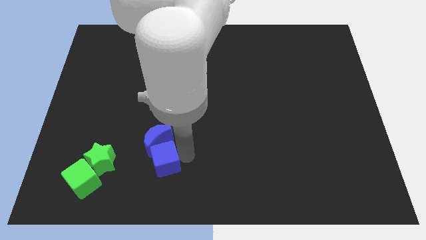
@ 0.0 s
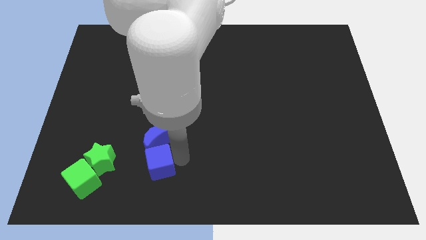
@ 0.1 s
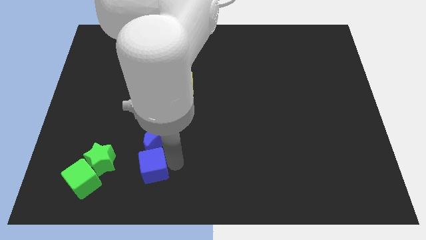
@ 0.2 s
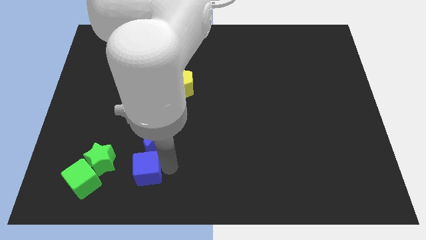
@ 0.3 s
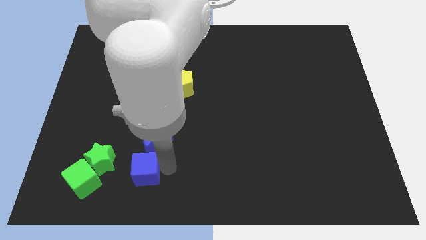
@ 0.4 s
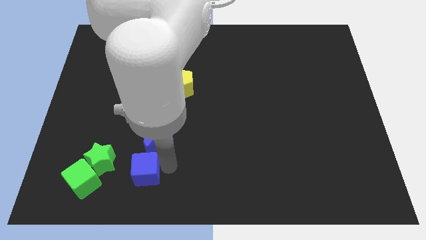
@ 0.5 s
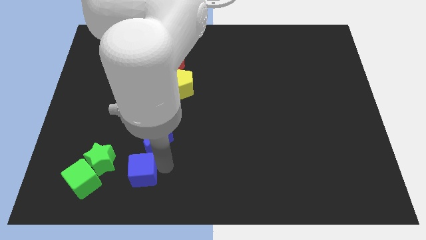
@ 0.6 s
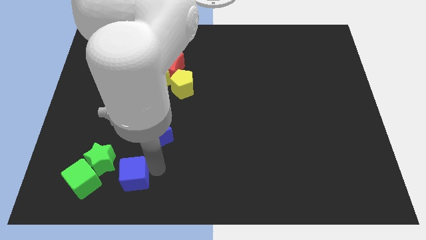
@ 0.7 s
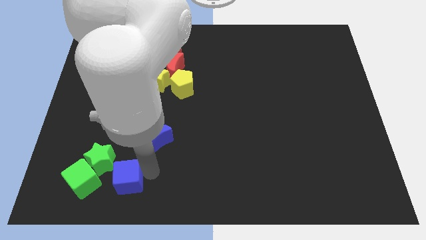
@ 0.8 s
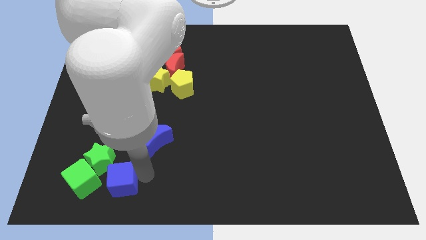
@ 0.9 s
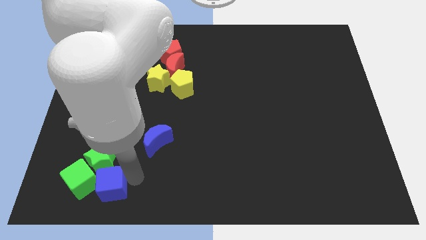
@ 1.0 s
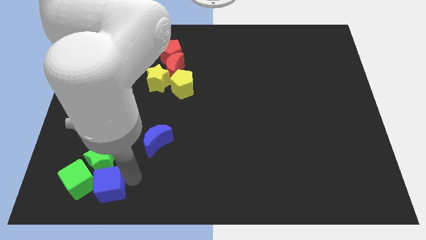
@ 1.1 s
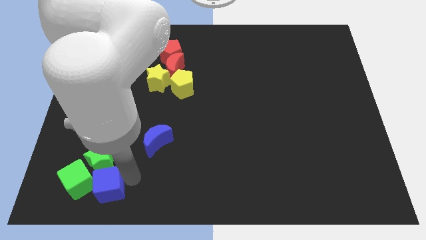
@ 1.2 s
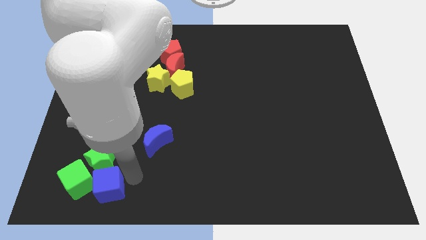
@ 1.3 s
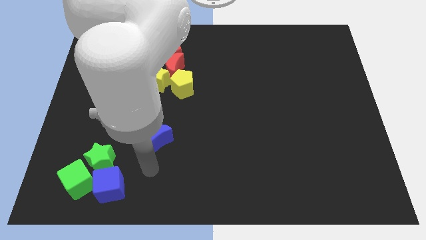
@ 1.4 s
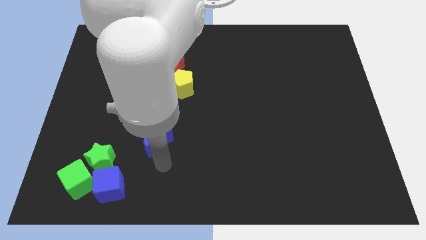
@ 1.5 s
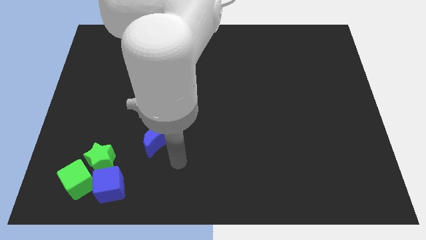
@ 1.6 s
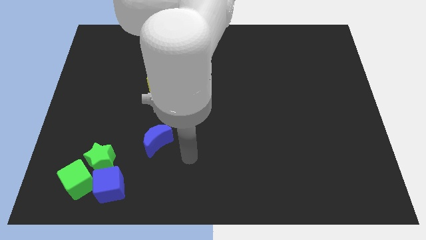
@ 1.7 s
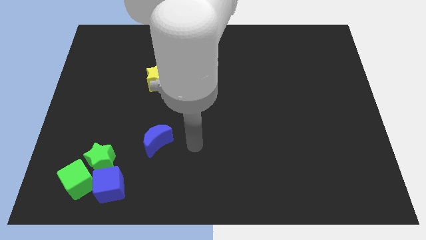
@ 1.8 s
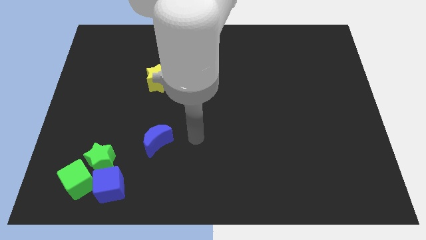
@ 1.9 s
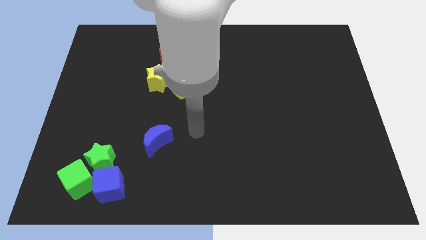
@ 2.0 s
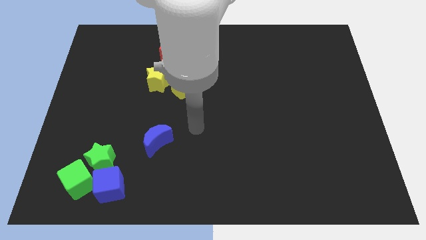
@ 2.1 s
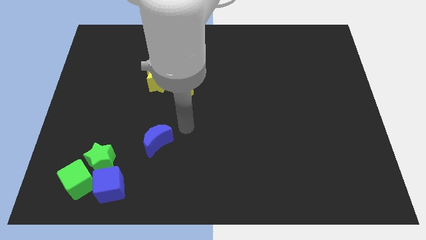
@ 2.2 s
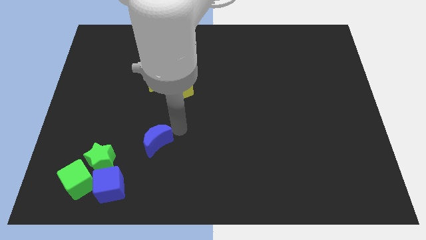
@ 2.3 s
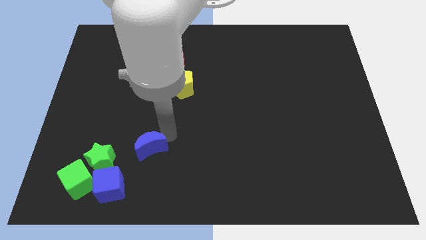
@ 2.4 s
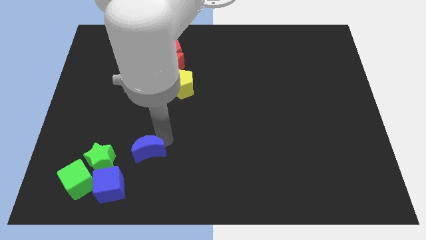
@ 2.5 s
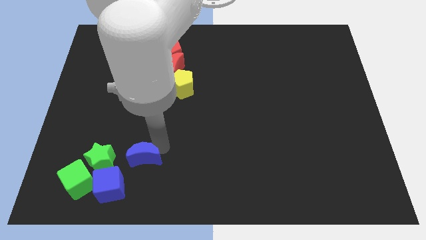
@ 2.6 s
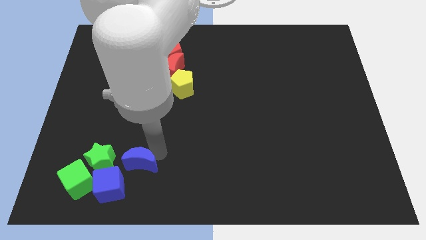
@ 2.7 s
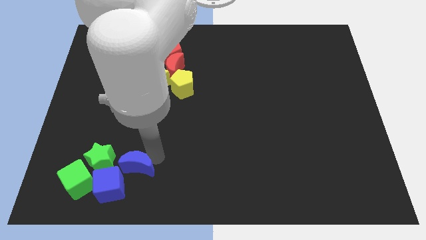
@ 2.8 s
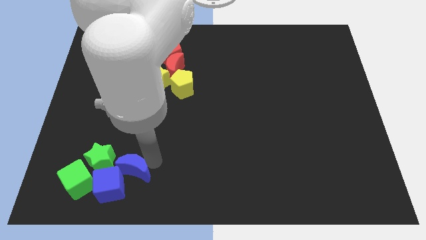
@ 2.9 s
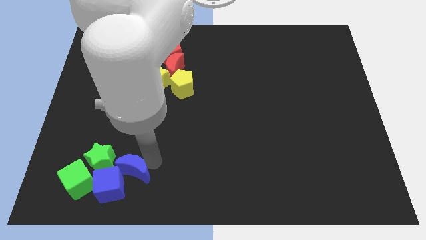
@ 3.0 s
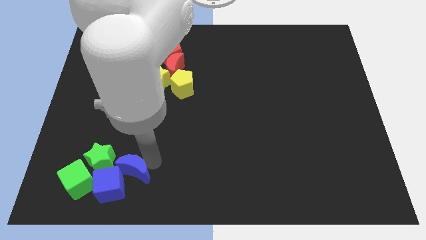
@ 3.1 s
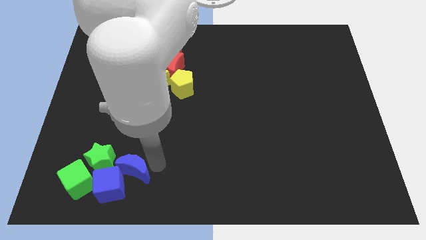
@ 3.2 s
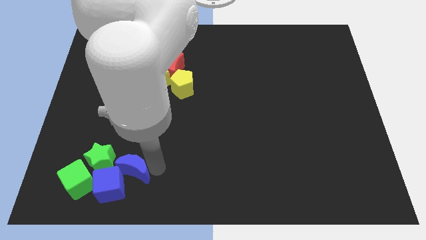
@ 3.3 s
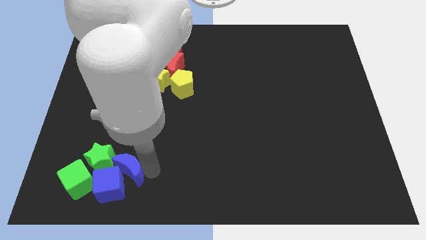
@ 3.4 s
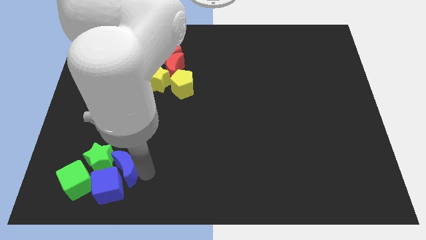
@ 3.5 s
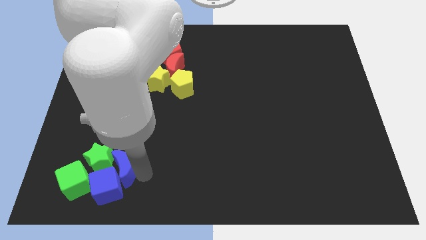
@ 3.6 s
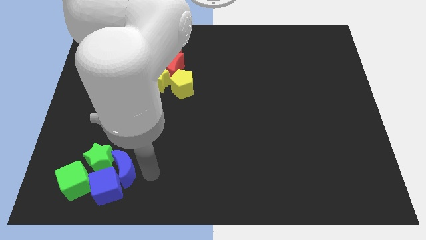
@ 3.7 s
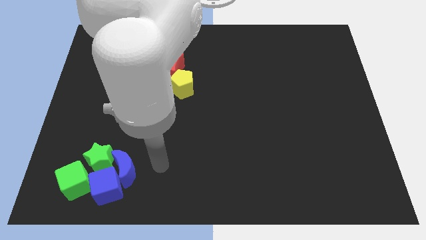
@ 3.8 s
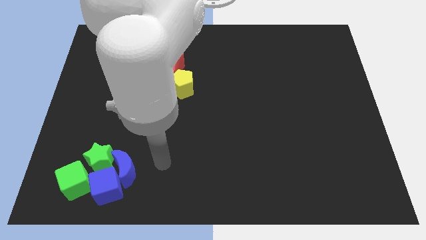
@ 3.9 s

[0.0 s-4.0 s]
push blue moon and blue cube towards green star and green cube

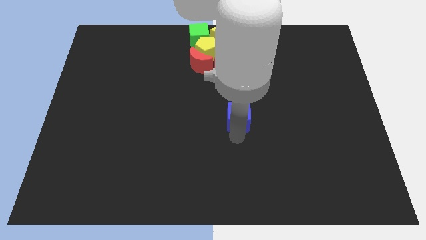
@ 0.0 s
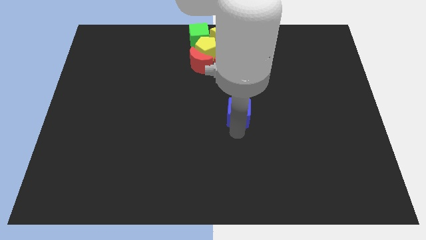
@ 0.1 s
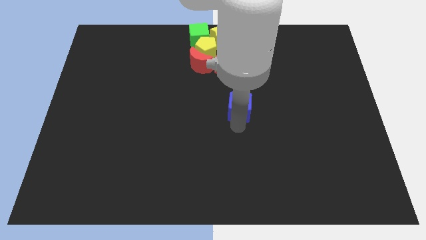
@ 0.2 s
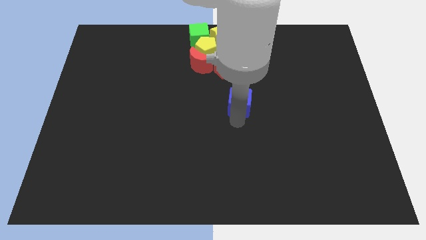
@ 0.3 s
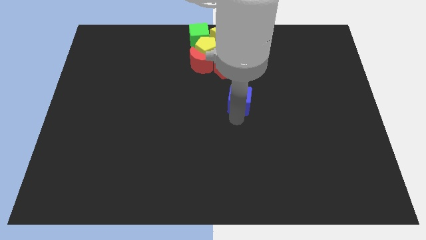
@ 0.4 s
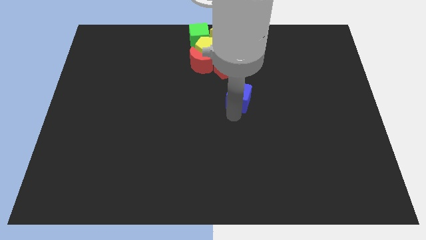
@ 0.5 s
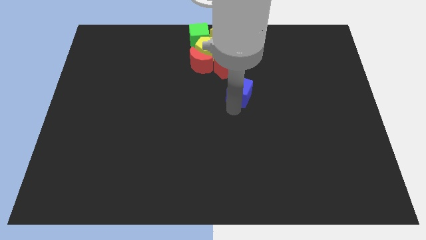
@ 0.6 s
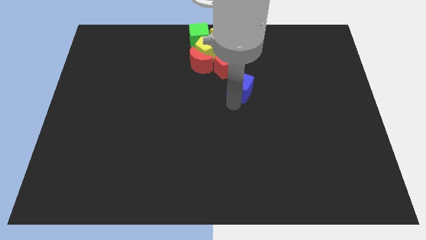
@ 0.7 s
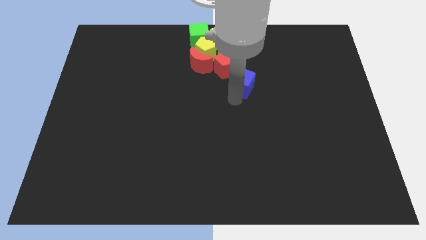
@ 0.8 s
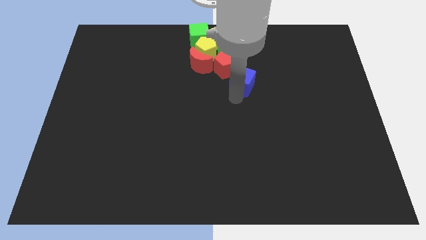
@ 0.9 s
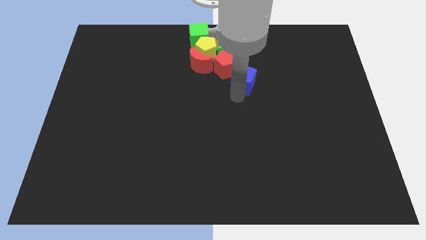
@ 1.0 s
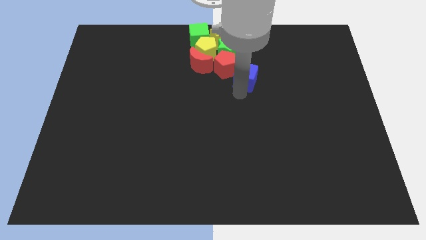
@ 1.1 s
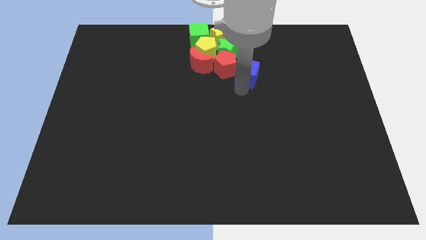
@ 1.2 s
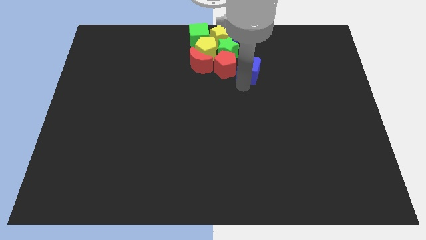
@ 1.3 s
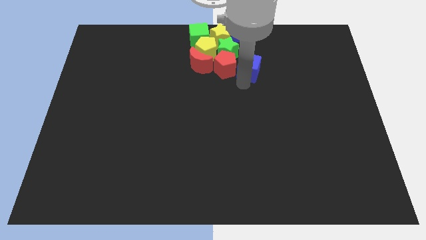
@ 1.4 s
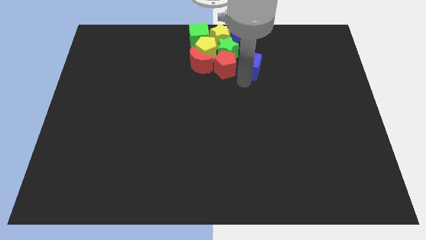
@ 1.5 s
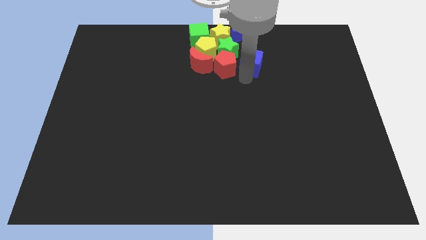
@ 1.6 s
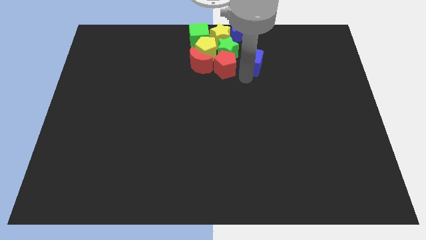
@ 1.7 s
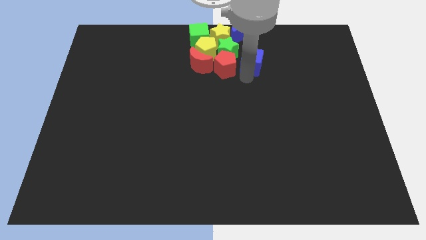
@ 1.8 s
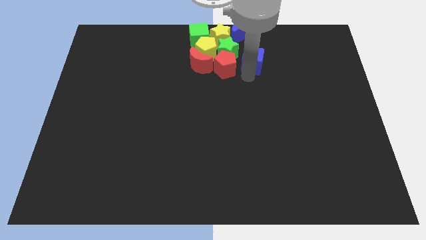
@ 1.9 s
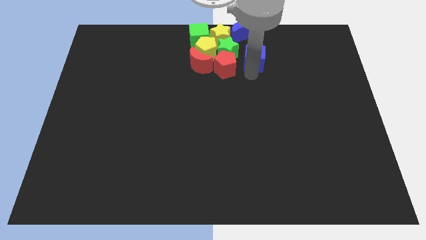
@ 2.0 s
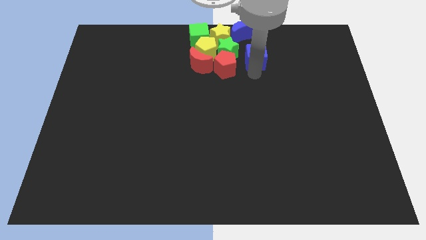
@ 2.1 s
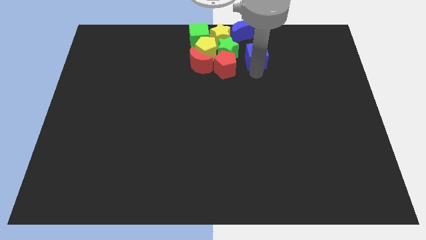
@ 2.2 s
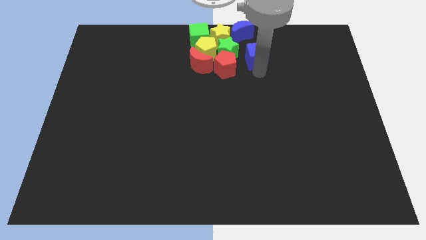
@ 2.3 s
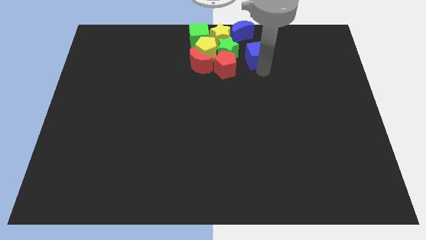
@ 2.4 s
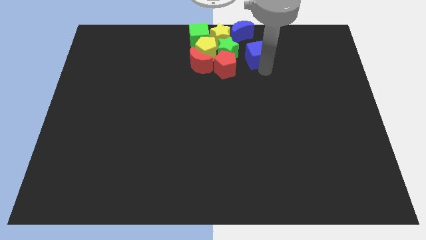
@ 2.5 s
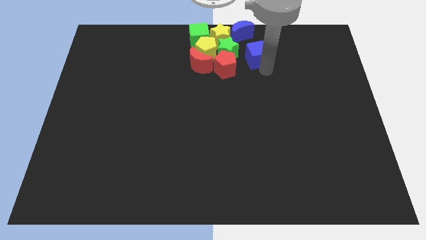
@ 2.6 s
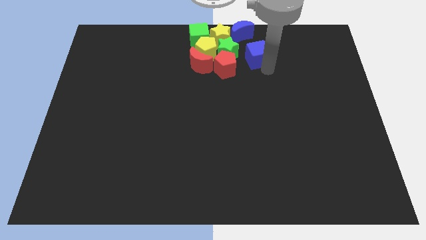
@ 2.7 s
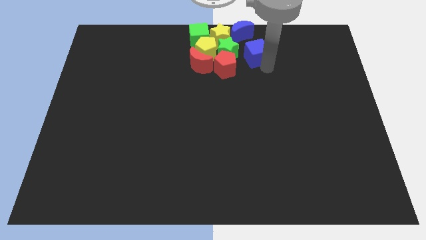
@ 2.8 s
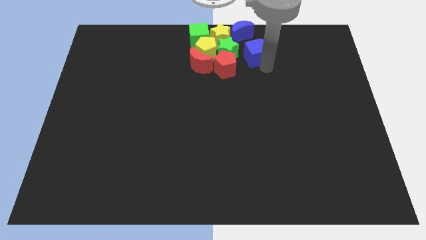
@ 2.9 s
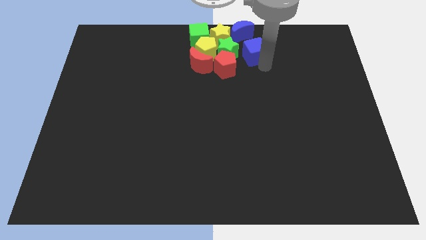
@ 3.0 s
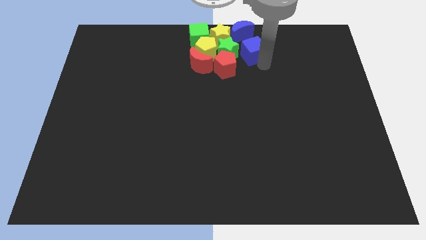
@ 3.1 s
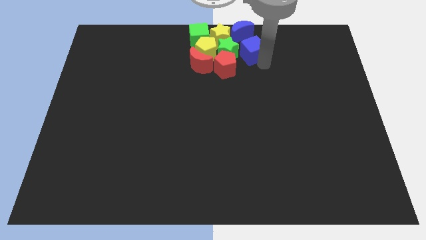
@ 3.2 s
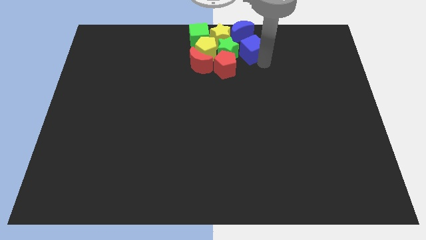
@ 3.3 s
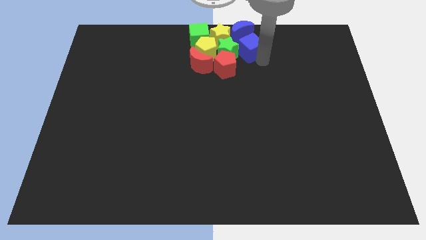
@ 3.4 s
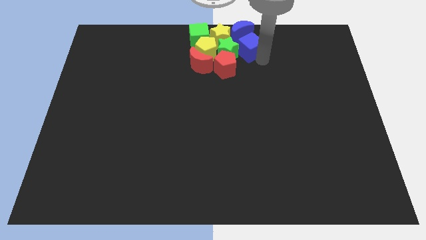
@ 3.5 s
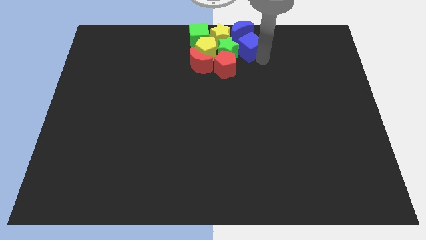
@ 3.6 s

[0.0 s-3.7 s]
push the blue cube into the group of blocks

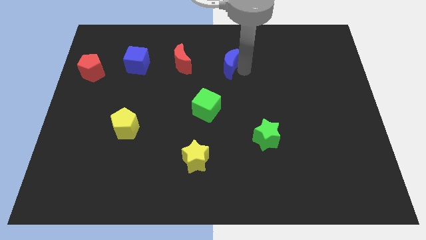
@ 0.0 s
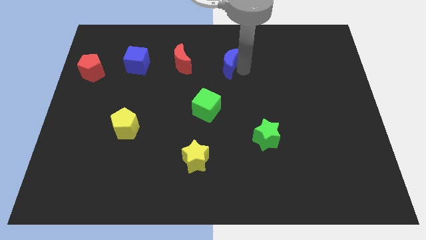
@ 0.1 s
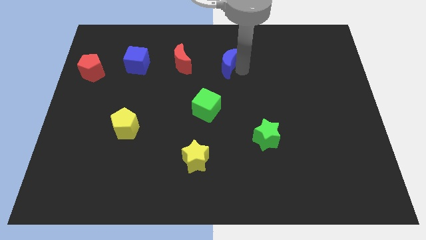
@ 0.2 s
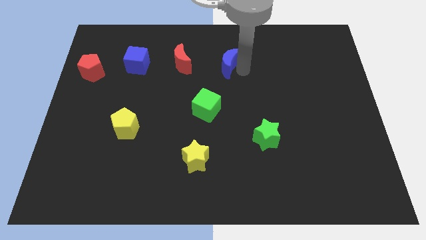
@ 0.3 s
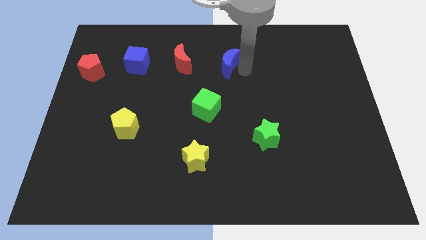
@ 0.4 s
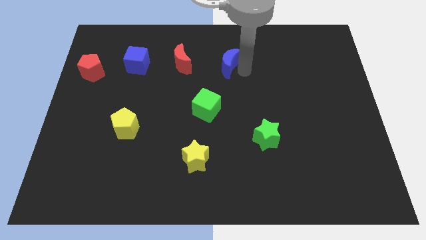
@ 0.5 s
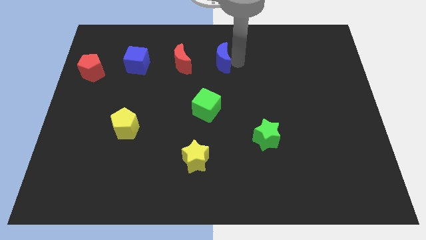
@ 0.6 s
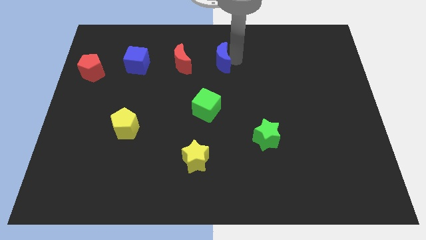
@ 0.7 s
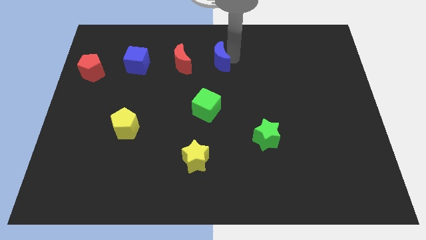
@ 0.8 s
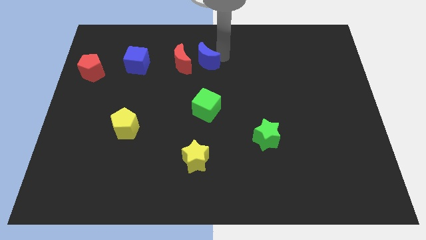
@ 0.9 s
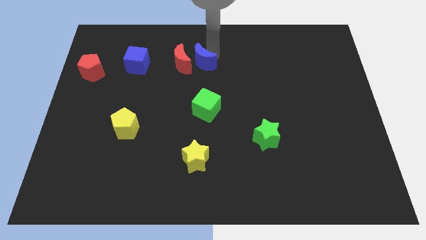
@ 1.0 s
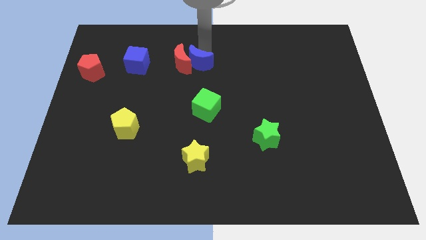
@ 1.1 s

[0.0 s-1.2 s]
put the blue moon vertically above the green cube
